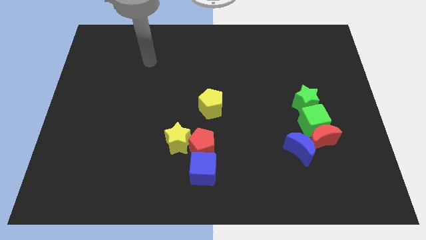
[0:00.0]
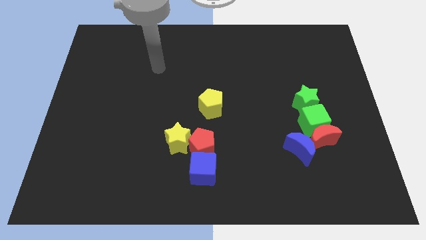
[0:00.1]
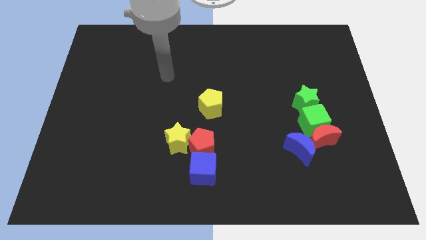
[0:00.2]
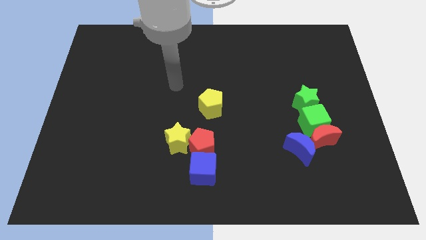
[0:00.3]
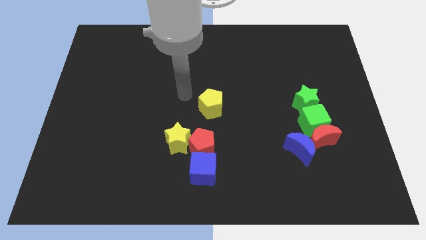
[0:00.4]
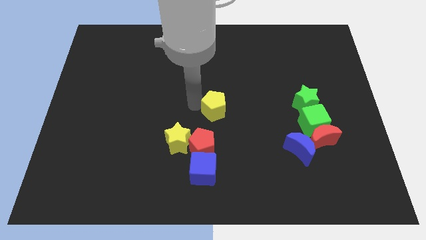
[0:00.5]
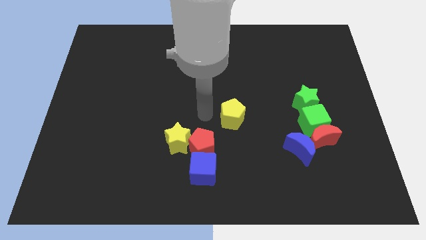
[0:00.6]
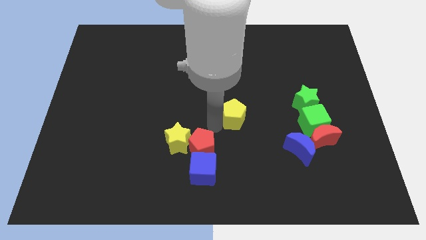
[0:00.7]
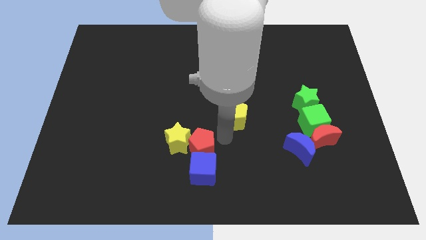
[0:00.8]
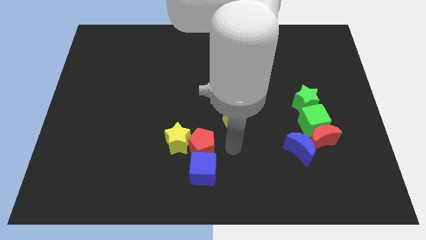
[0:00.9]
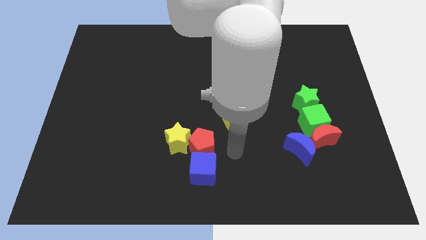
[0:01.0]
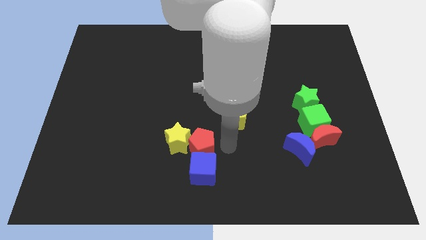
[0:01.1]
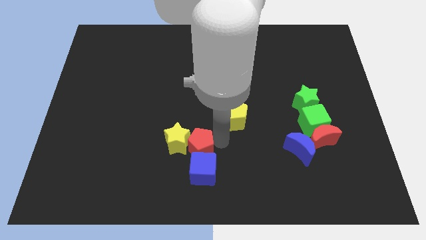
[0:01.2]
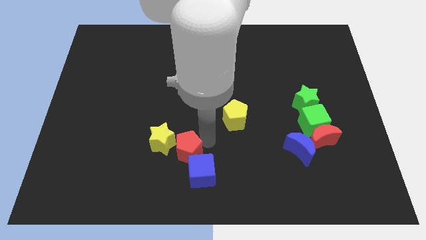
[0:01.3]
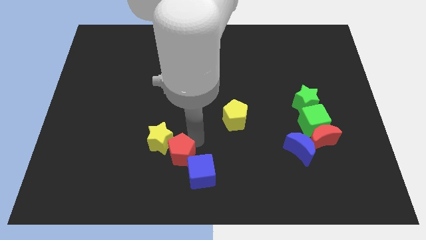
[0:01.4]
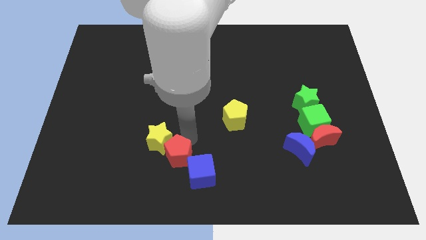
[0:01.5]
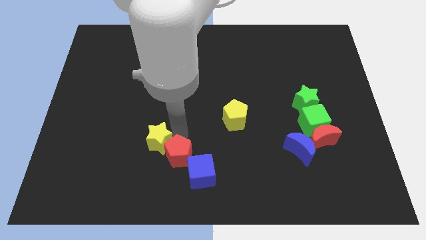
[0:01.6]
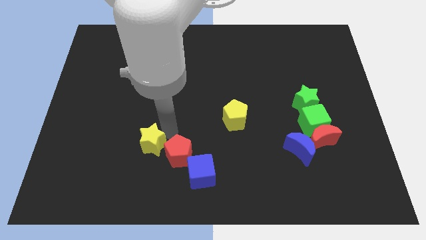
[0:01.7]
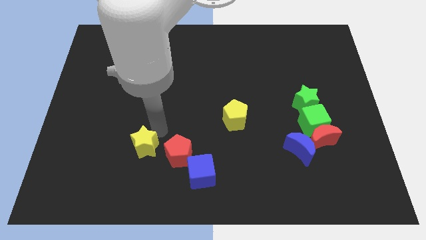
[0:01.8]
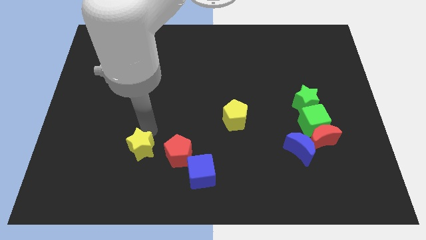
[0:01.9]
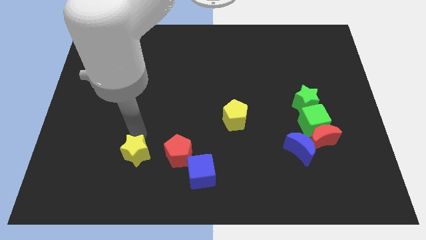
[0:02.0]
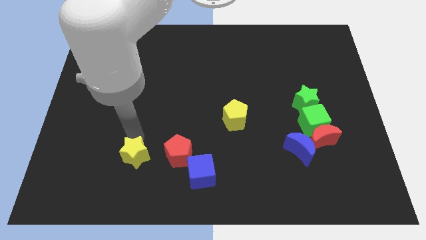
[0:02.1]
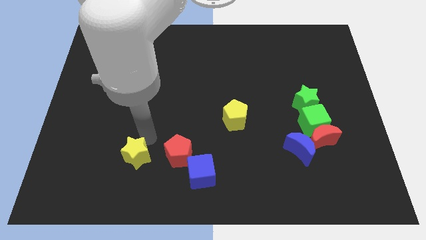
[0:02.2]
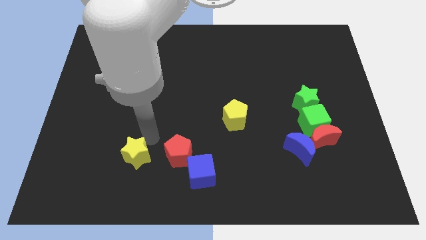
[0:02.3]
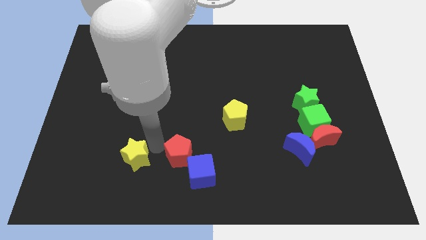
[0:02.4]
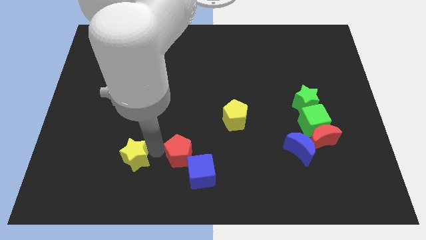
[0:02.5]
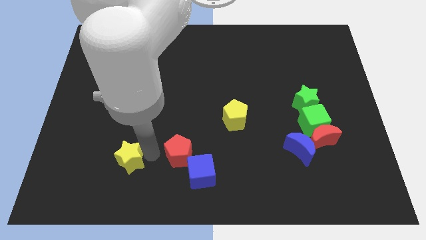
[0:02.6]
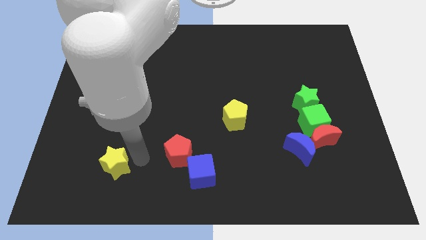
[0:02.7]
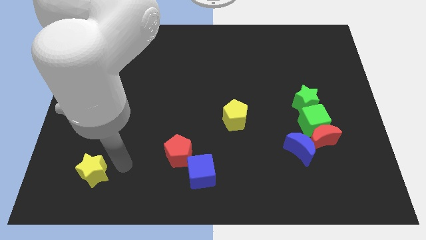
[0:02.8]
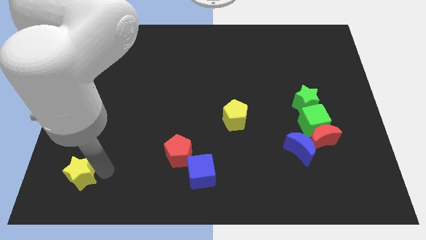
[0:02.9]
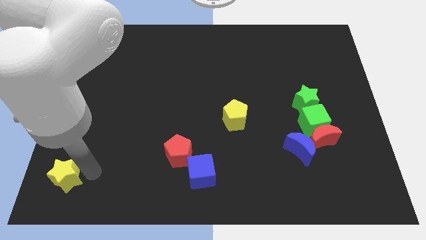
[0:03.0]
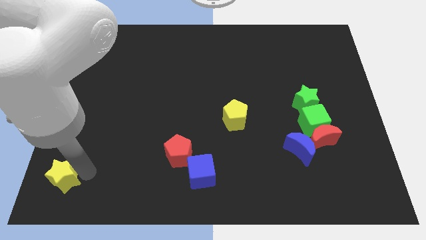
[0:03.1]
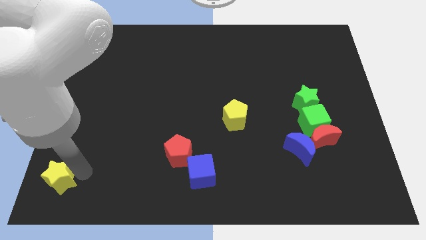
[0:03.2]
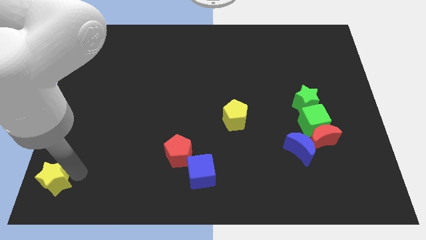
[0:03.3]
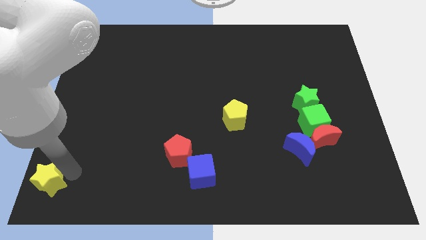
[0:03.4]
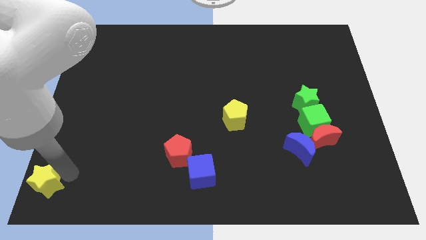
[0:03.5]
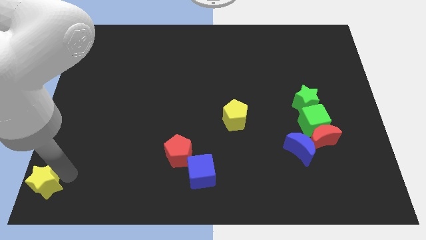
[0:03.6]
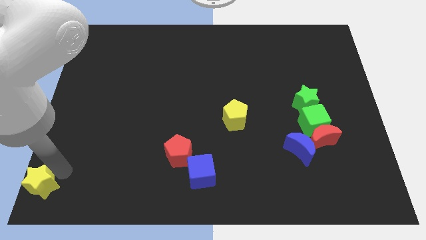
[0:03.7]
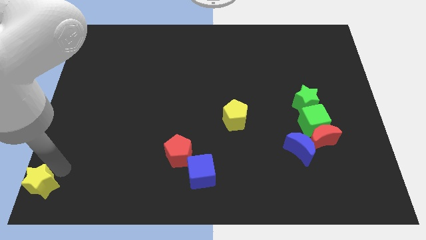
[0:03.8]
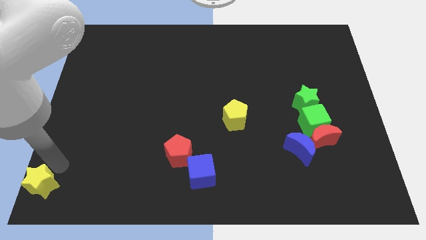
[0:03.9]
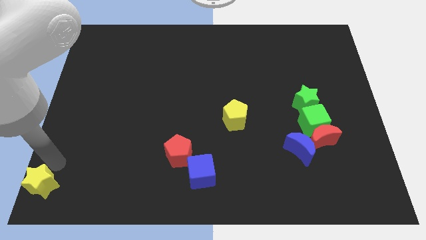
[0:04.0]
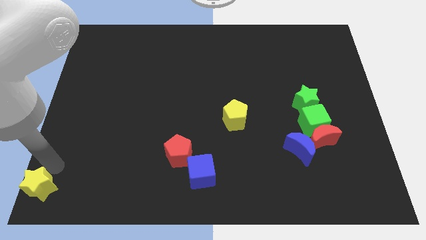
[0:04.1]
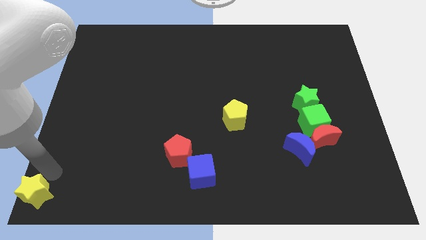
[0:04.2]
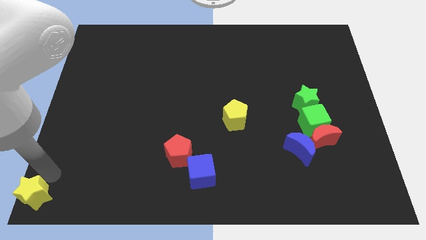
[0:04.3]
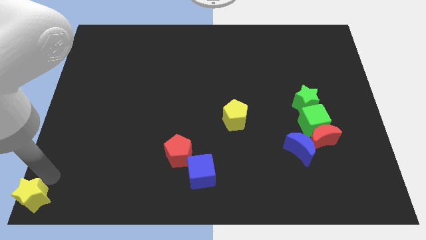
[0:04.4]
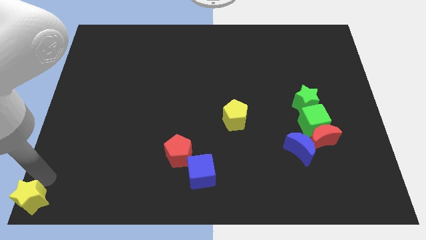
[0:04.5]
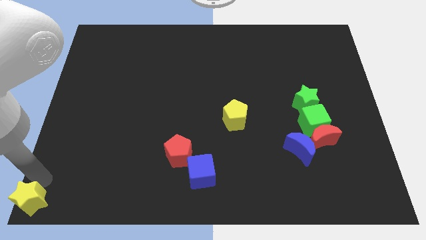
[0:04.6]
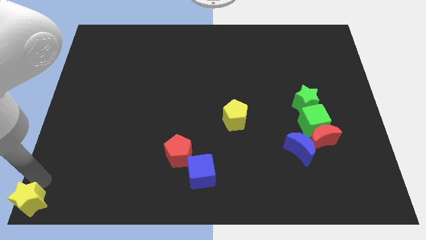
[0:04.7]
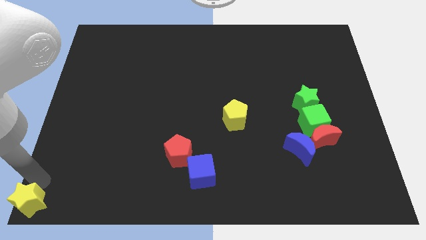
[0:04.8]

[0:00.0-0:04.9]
move the yellow star to the bottom left corner of the board

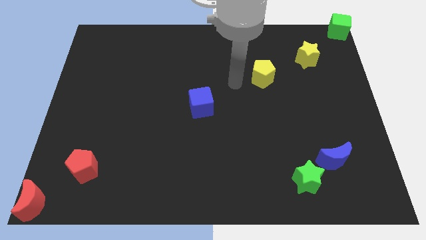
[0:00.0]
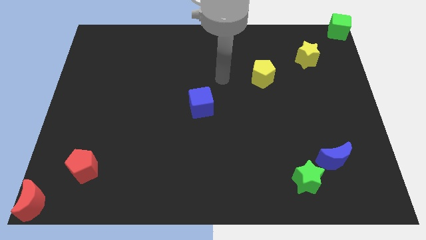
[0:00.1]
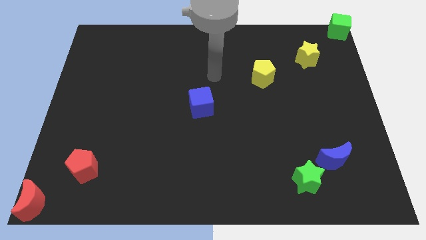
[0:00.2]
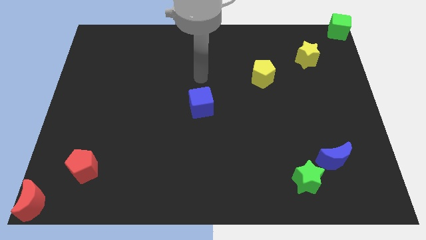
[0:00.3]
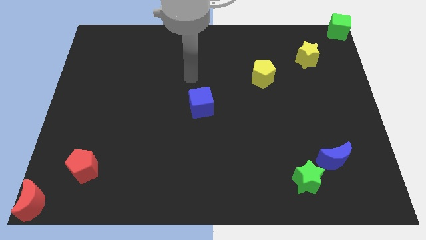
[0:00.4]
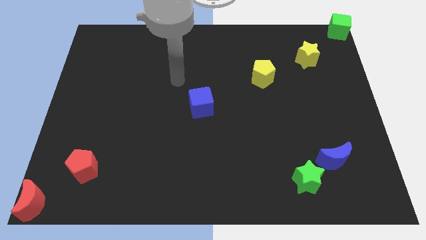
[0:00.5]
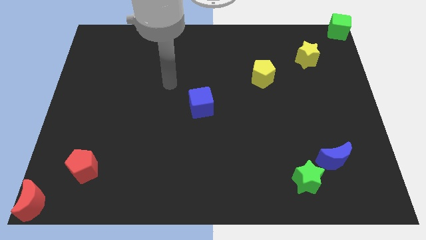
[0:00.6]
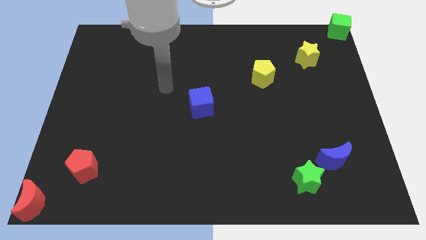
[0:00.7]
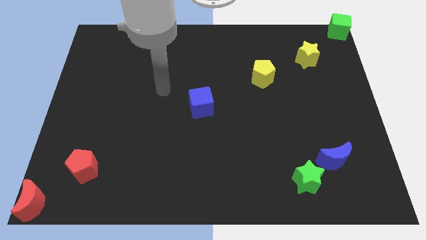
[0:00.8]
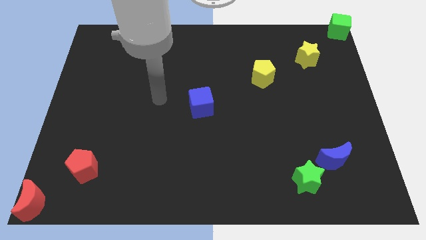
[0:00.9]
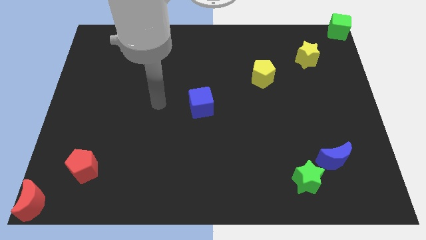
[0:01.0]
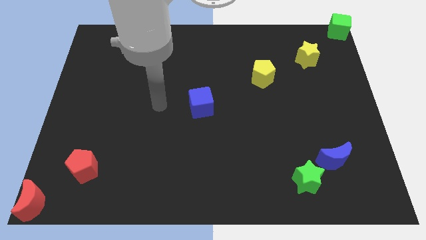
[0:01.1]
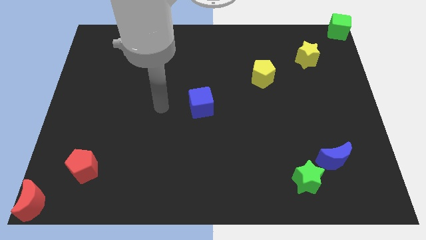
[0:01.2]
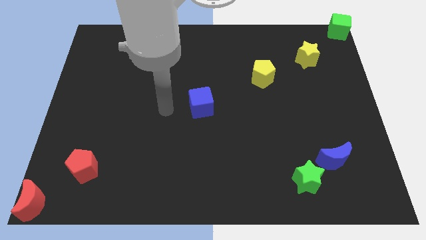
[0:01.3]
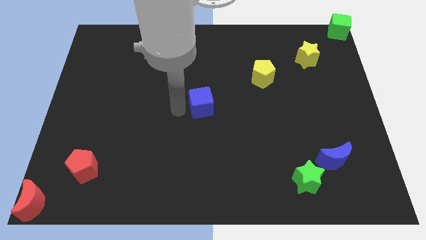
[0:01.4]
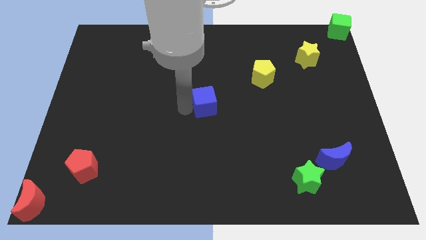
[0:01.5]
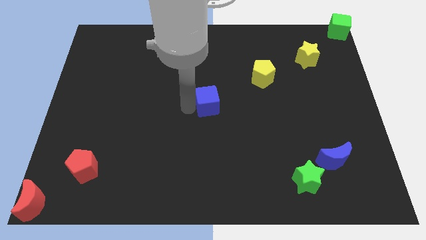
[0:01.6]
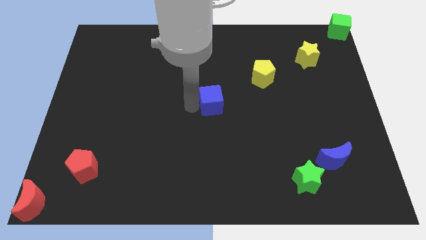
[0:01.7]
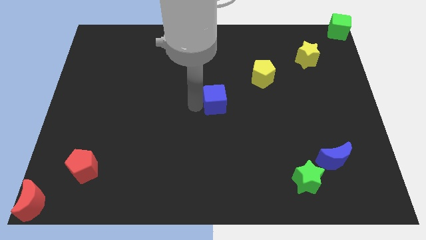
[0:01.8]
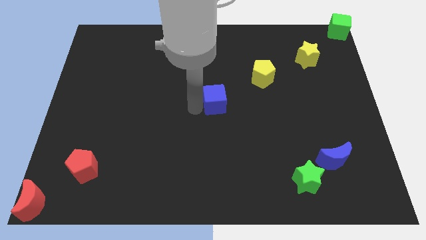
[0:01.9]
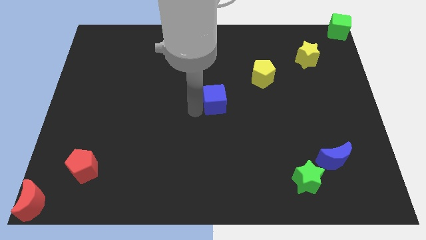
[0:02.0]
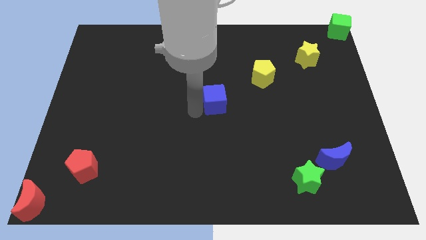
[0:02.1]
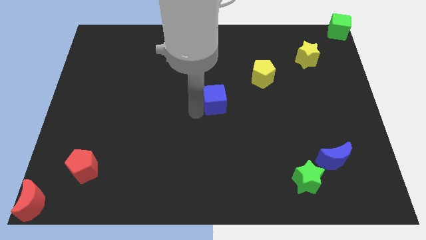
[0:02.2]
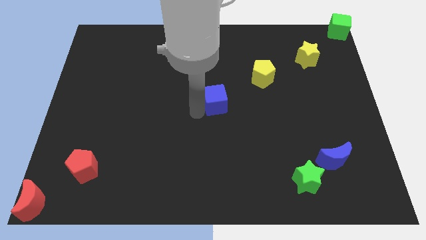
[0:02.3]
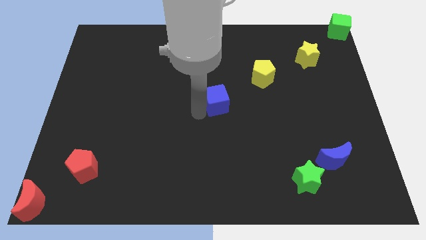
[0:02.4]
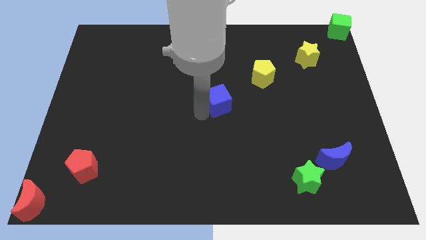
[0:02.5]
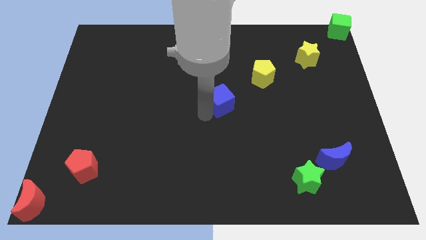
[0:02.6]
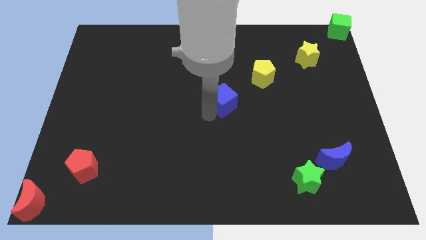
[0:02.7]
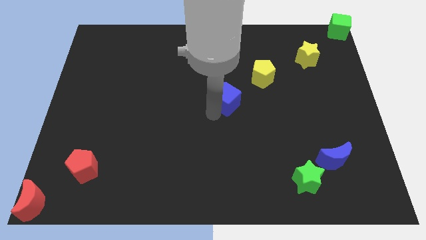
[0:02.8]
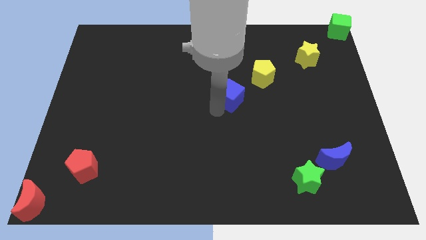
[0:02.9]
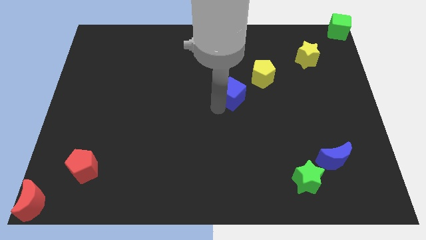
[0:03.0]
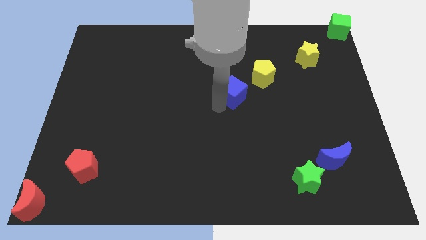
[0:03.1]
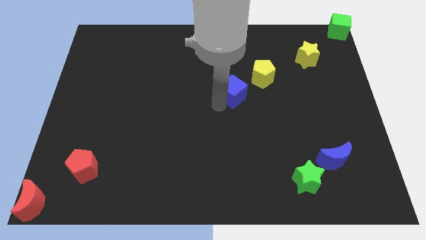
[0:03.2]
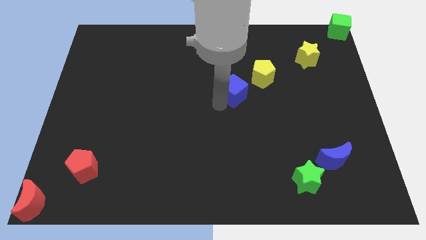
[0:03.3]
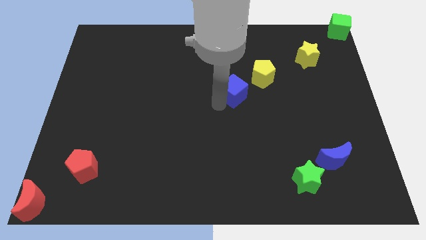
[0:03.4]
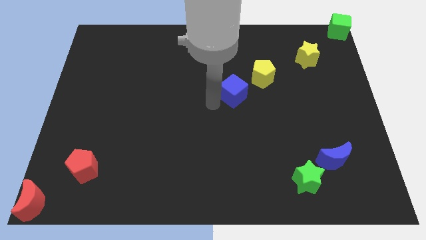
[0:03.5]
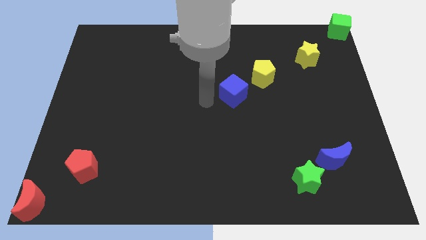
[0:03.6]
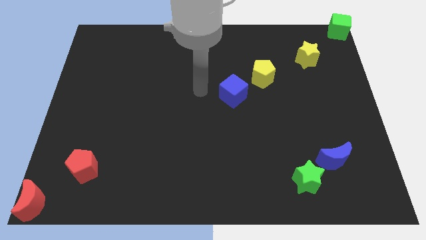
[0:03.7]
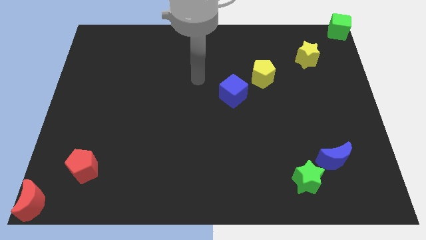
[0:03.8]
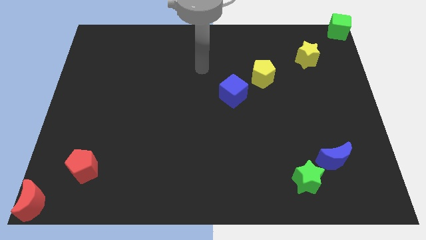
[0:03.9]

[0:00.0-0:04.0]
push the blue cube into the yellow pentagon

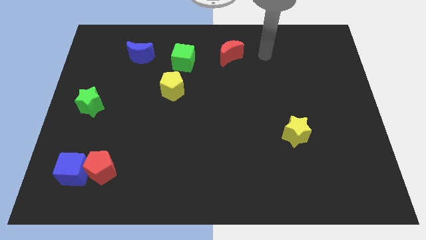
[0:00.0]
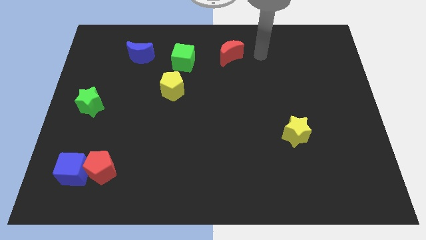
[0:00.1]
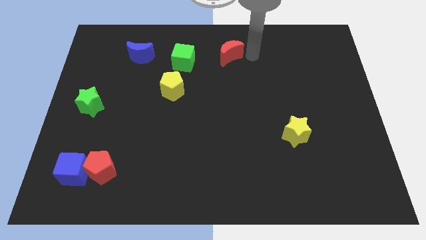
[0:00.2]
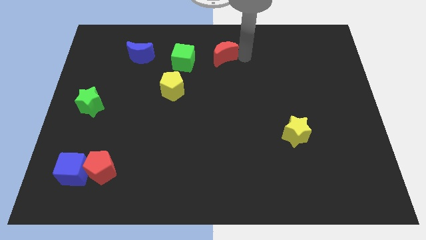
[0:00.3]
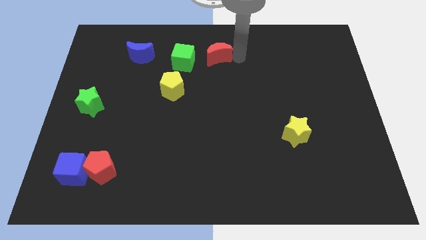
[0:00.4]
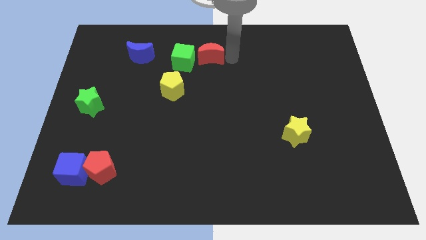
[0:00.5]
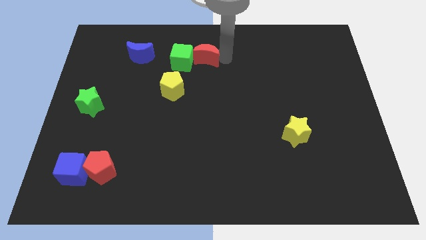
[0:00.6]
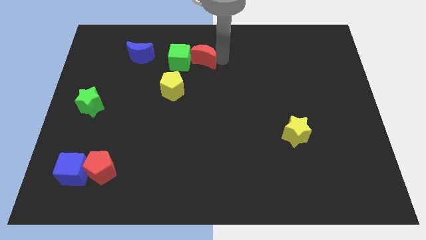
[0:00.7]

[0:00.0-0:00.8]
push the red crescent into the green cube
